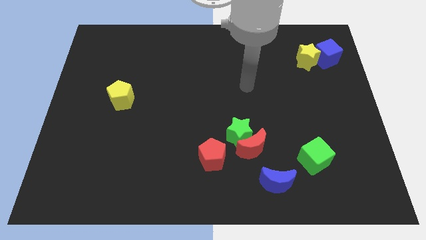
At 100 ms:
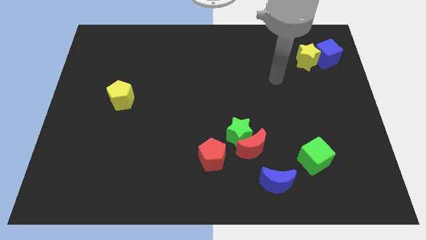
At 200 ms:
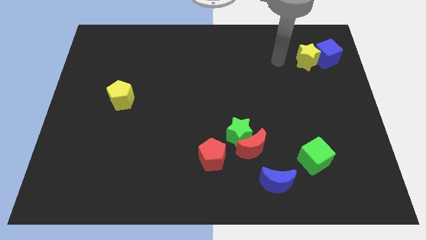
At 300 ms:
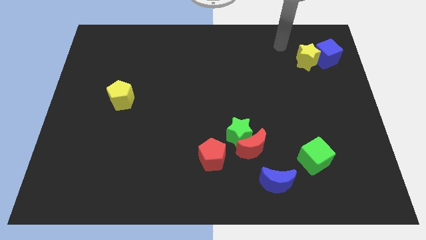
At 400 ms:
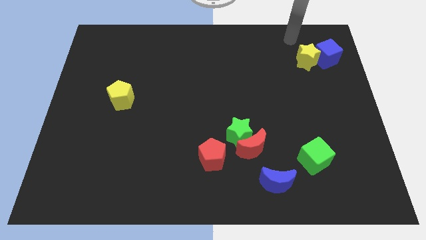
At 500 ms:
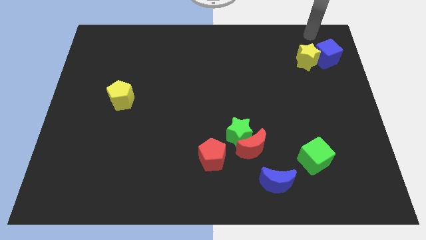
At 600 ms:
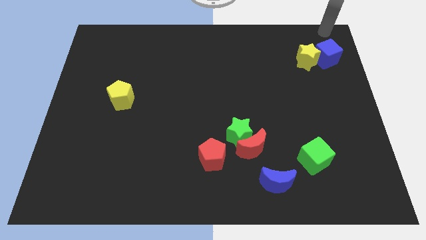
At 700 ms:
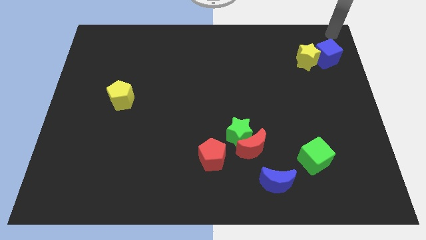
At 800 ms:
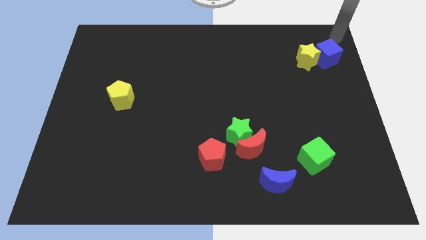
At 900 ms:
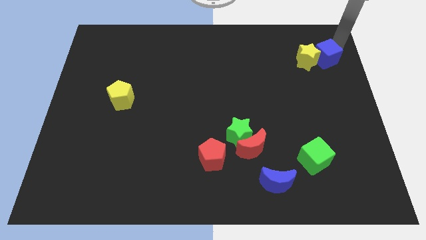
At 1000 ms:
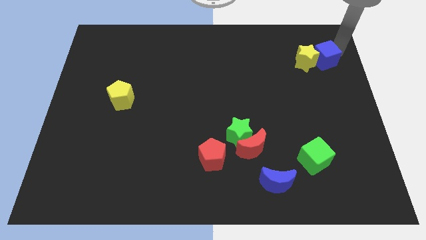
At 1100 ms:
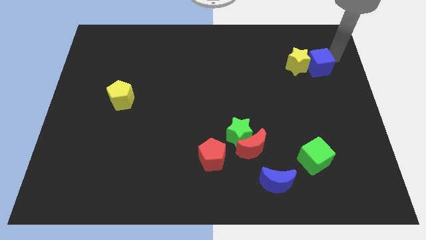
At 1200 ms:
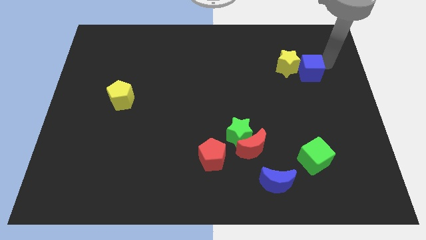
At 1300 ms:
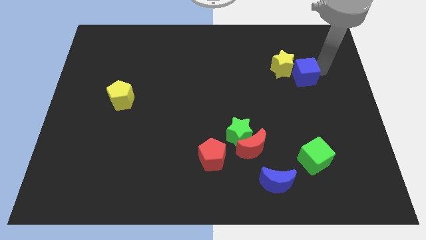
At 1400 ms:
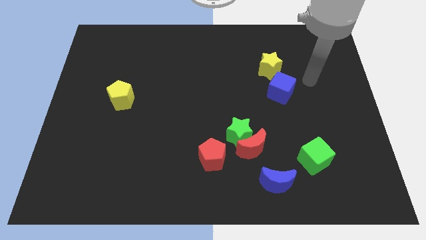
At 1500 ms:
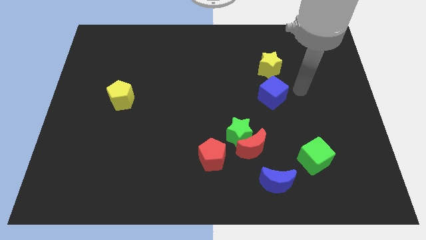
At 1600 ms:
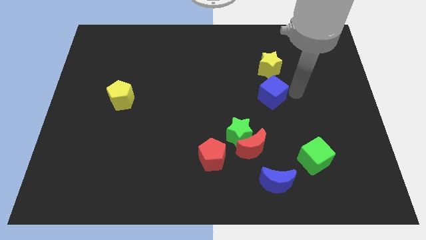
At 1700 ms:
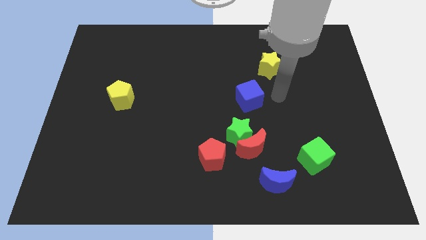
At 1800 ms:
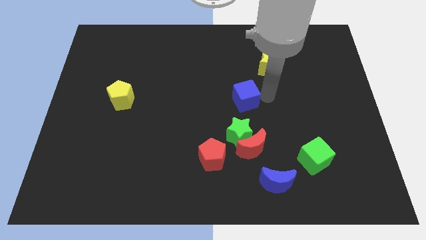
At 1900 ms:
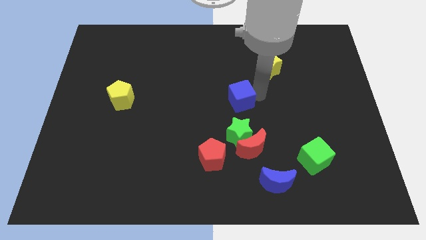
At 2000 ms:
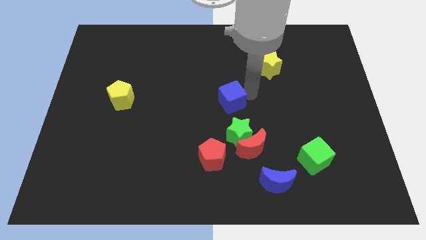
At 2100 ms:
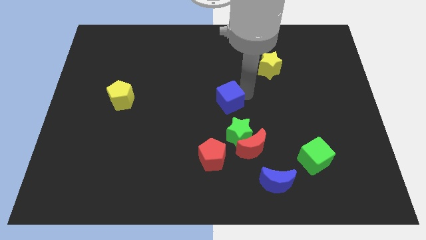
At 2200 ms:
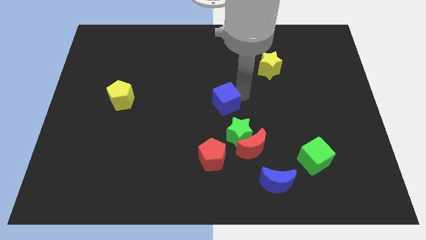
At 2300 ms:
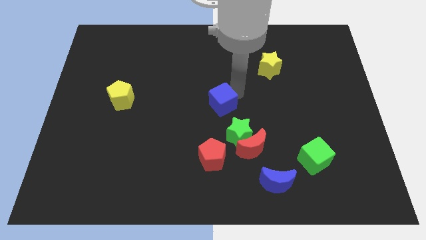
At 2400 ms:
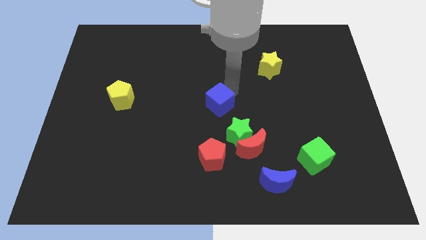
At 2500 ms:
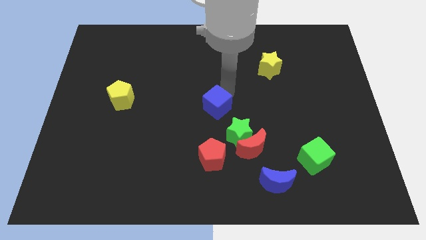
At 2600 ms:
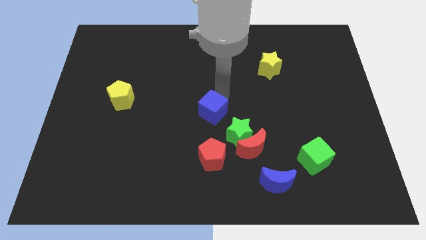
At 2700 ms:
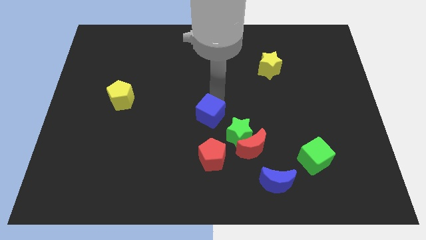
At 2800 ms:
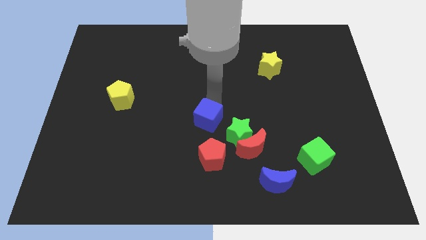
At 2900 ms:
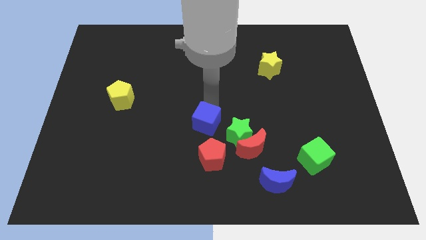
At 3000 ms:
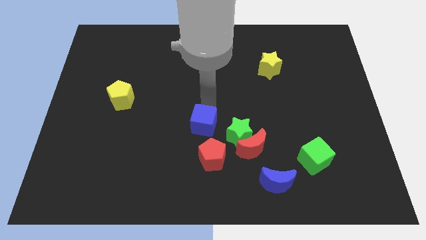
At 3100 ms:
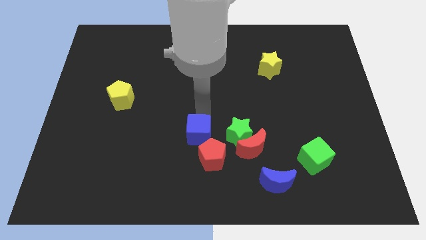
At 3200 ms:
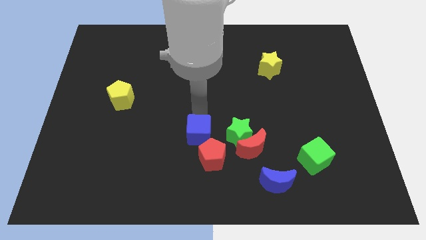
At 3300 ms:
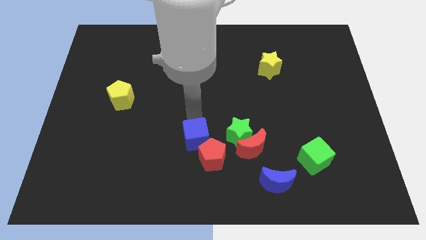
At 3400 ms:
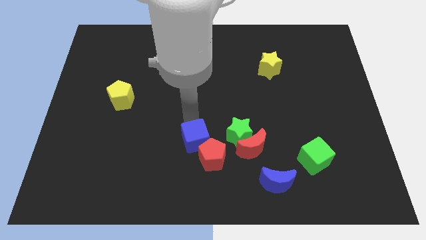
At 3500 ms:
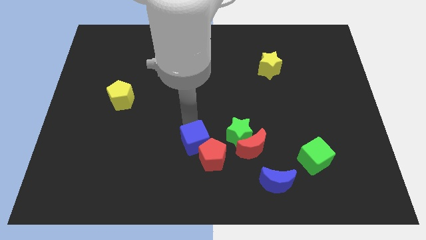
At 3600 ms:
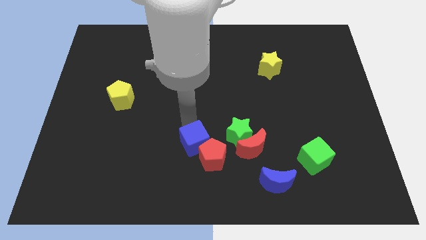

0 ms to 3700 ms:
move the blue cube towards the red pentagon

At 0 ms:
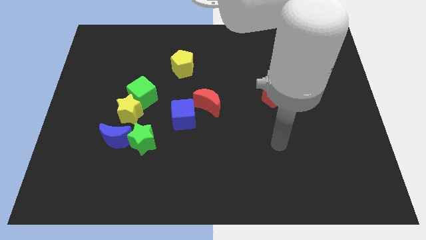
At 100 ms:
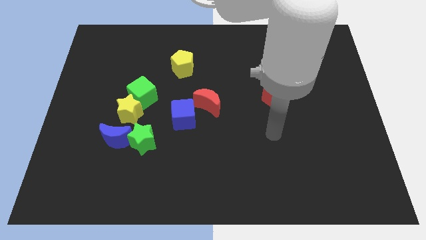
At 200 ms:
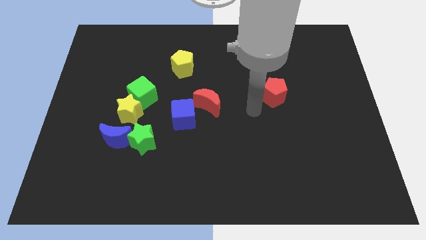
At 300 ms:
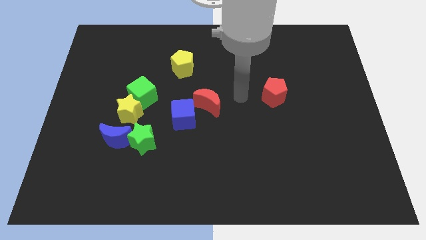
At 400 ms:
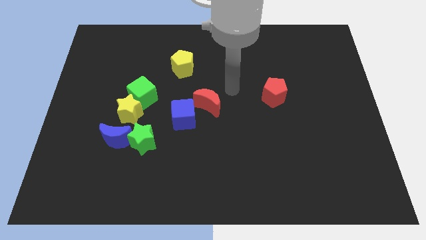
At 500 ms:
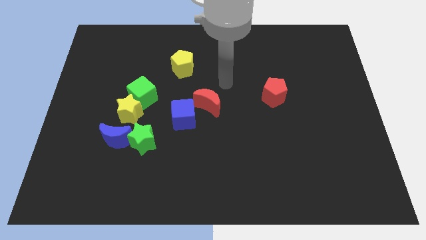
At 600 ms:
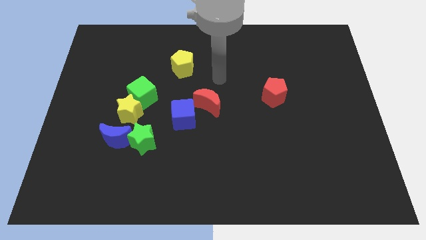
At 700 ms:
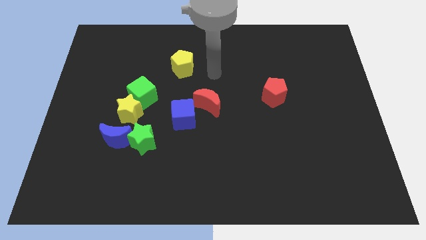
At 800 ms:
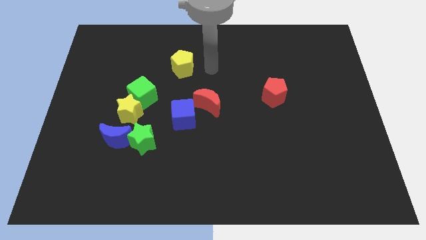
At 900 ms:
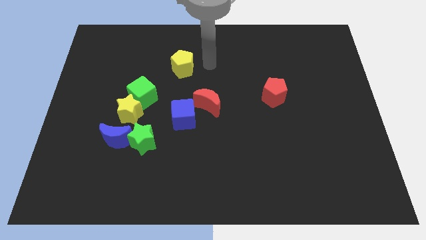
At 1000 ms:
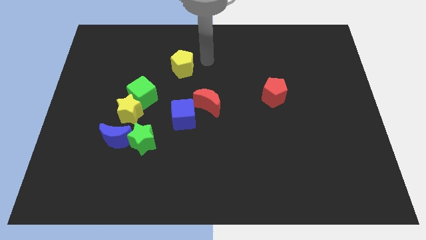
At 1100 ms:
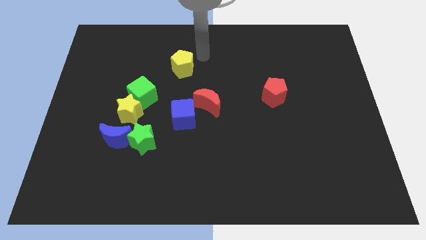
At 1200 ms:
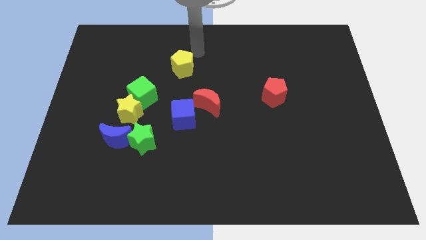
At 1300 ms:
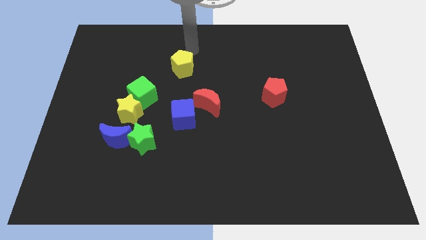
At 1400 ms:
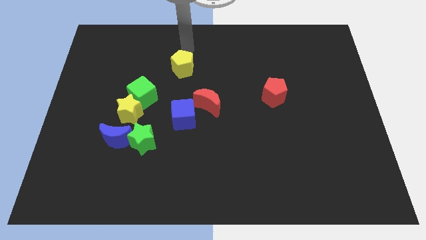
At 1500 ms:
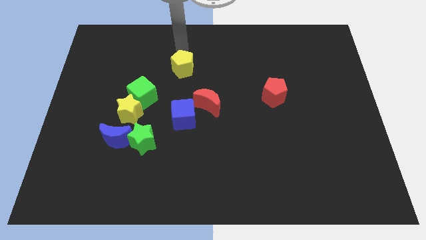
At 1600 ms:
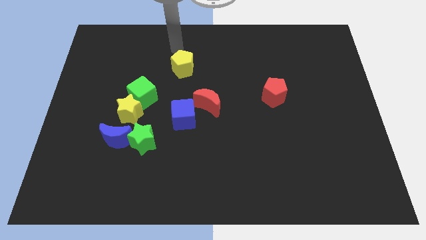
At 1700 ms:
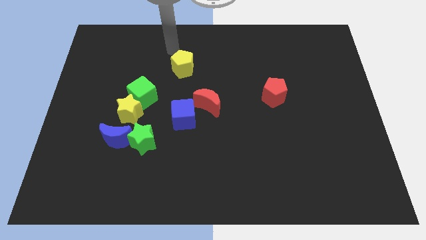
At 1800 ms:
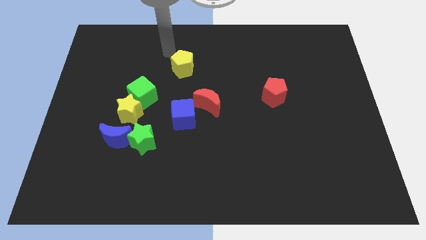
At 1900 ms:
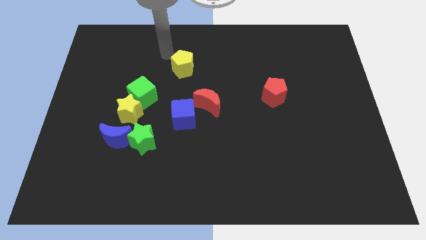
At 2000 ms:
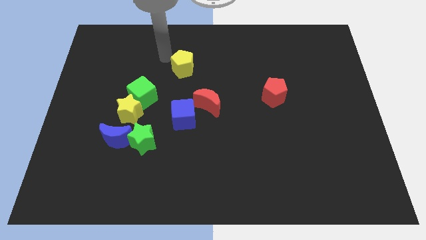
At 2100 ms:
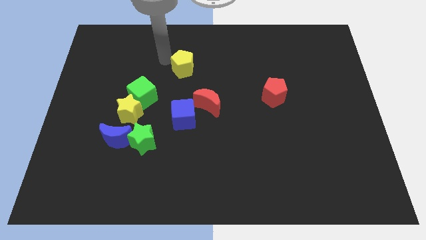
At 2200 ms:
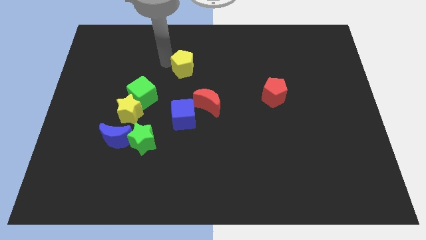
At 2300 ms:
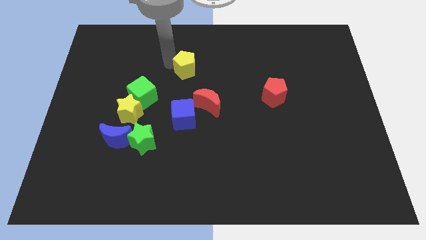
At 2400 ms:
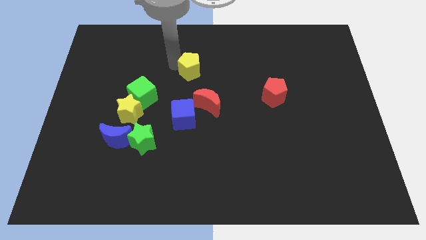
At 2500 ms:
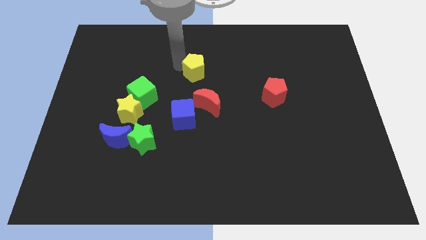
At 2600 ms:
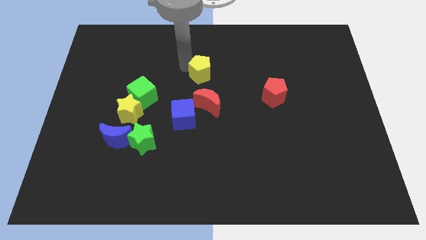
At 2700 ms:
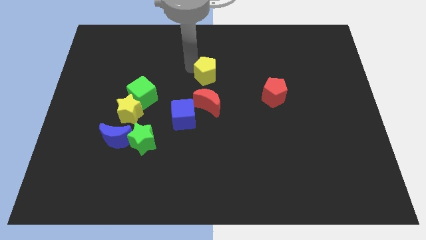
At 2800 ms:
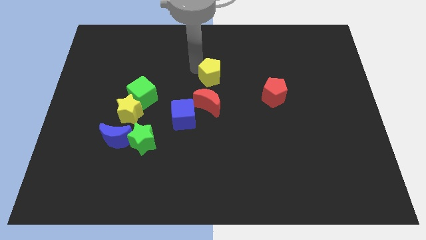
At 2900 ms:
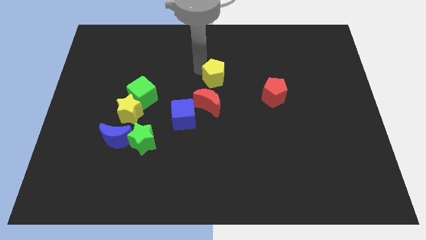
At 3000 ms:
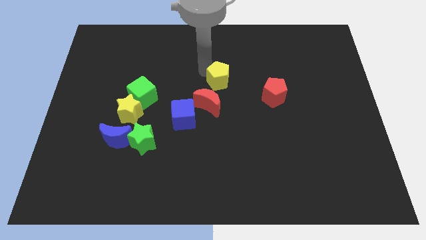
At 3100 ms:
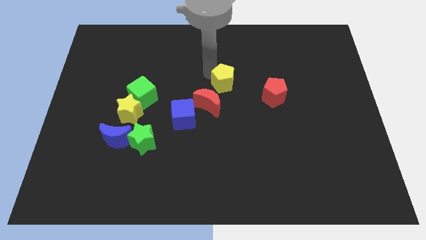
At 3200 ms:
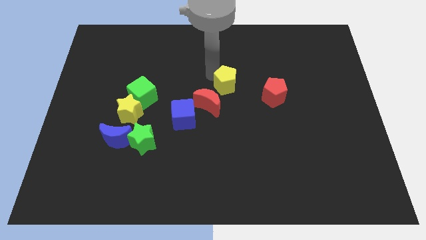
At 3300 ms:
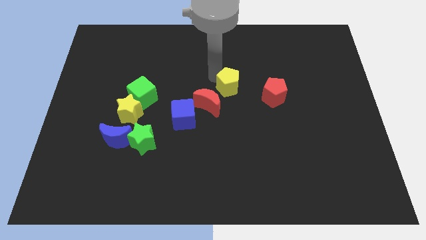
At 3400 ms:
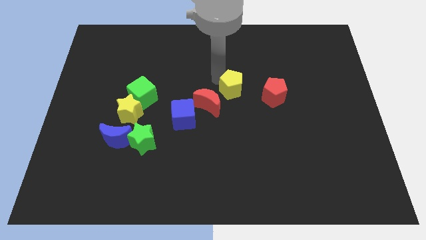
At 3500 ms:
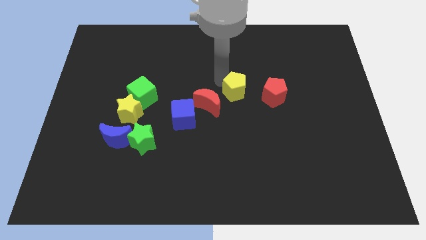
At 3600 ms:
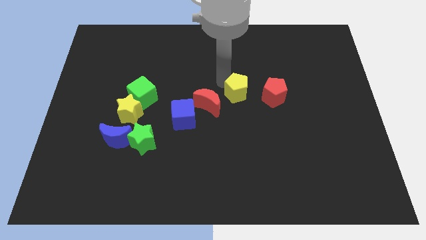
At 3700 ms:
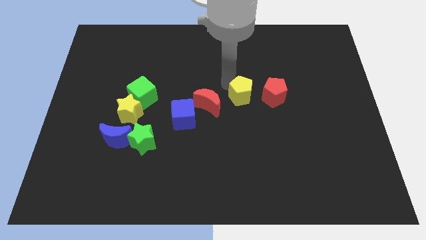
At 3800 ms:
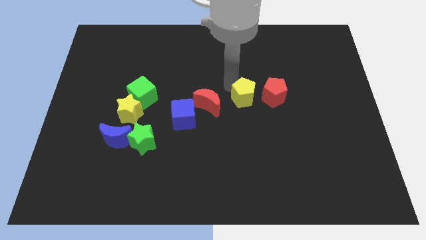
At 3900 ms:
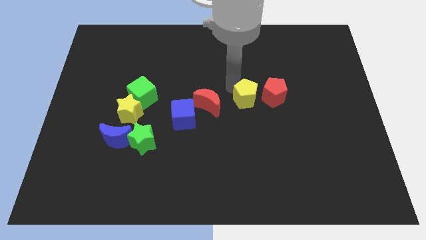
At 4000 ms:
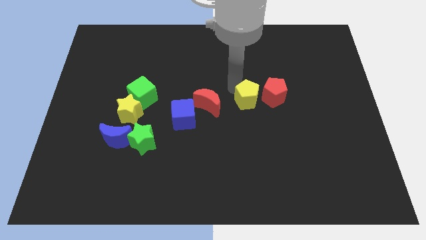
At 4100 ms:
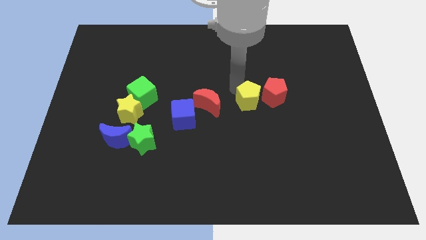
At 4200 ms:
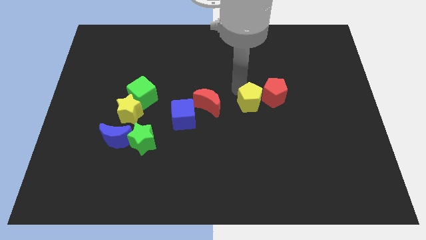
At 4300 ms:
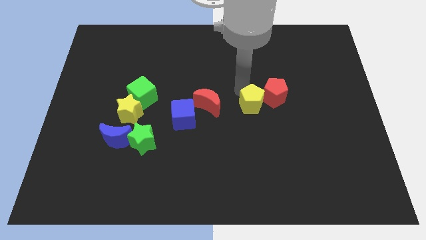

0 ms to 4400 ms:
slide the yellow pentagon towards the red pentagon

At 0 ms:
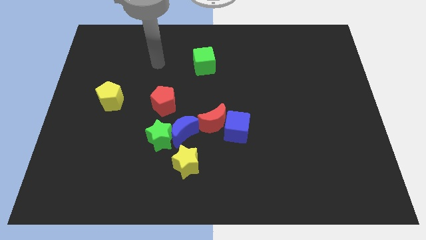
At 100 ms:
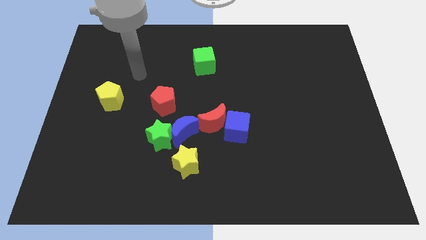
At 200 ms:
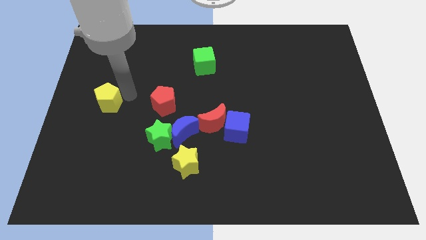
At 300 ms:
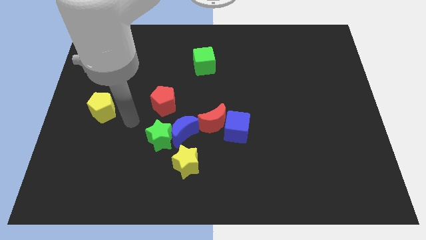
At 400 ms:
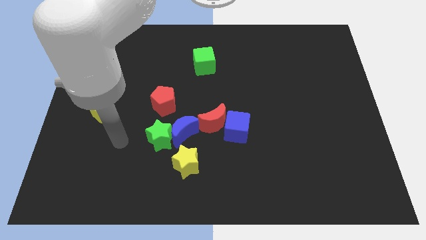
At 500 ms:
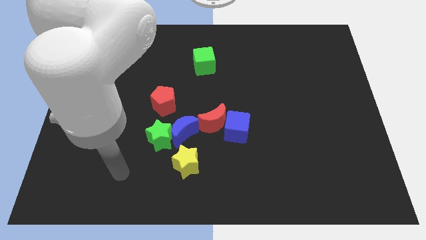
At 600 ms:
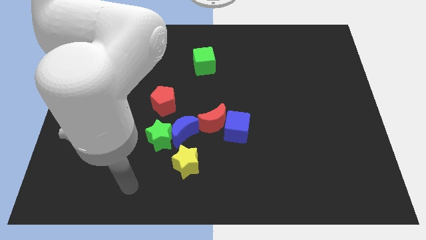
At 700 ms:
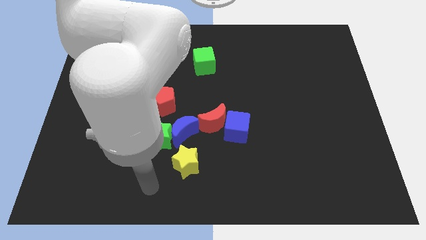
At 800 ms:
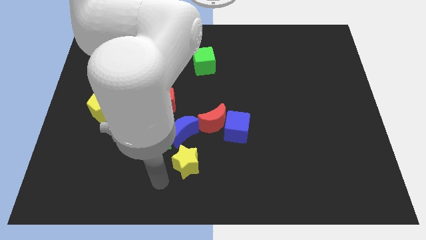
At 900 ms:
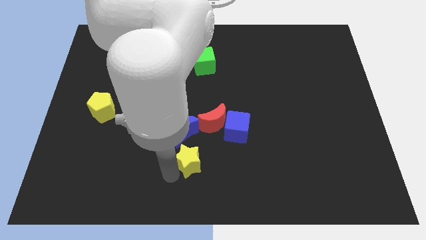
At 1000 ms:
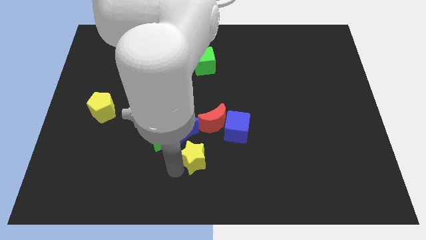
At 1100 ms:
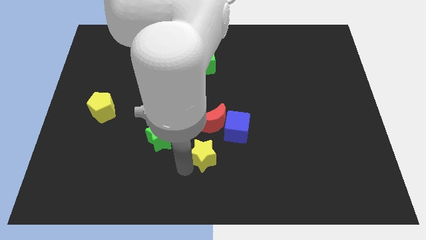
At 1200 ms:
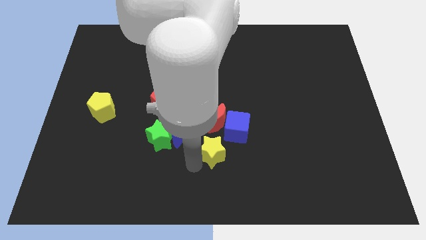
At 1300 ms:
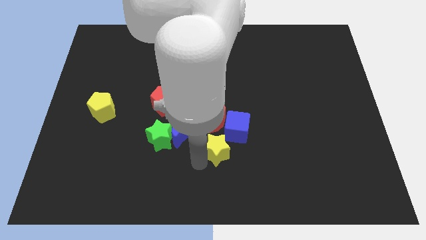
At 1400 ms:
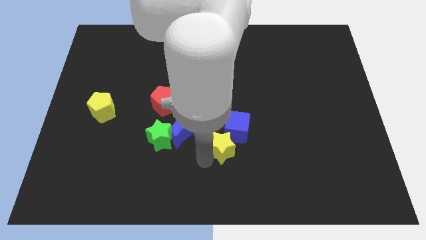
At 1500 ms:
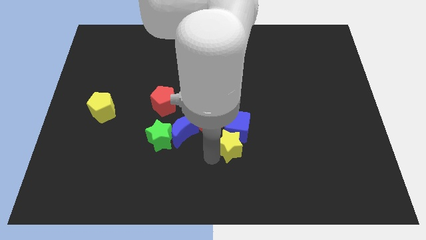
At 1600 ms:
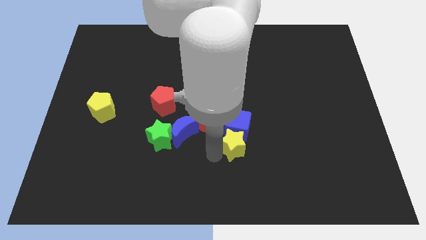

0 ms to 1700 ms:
move the yellow star next to the blue cube
